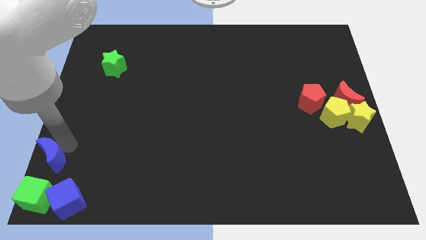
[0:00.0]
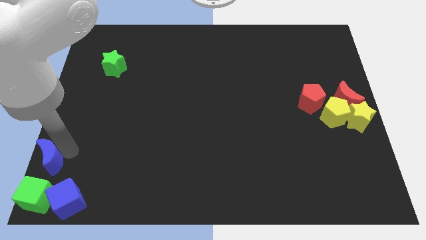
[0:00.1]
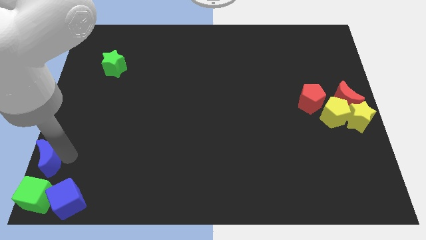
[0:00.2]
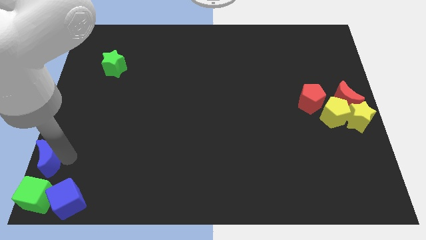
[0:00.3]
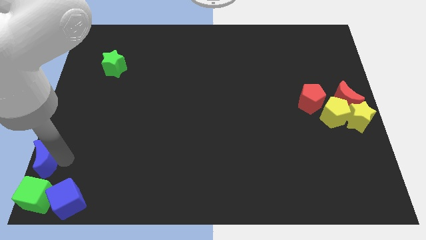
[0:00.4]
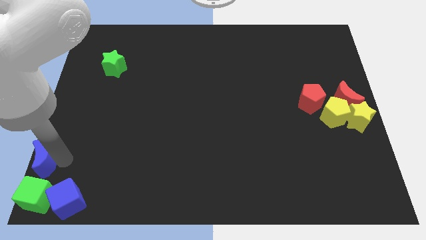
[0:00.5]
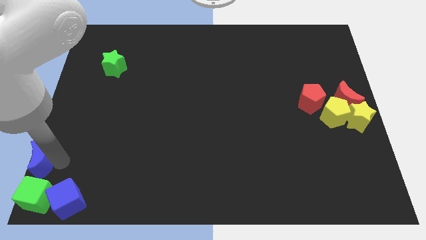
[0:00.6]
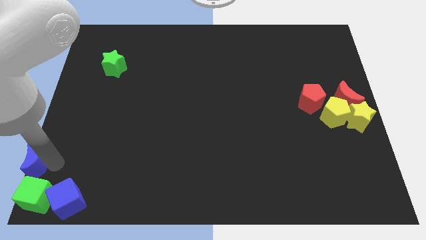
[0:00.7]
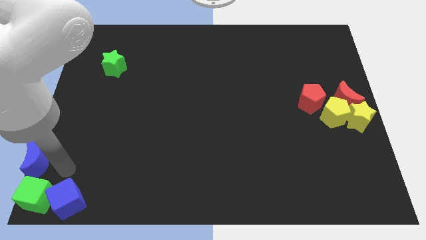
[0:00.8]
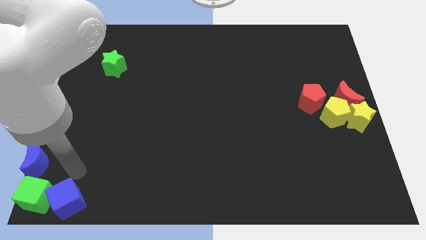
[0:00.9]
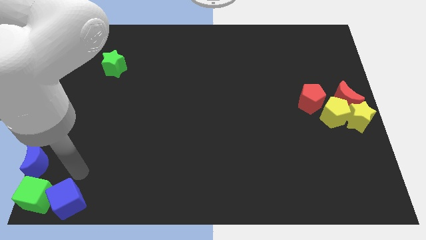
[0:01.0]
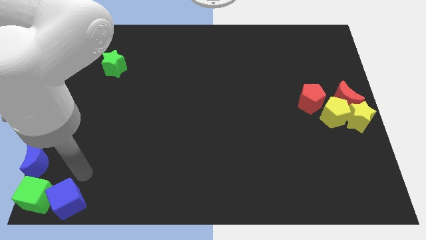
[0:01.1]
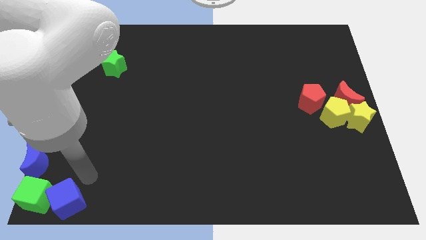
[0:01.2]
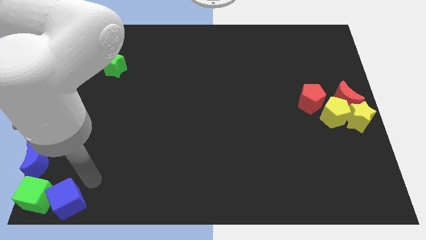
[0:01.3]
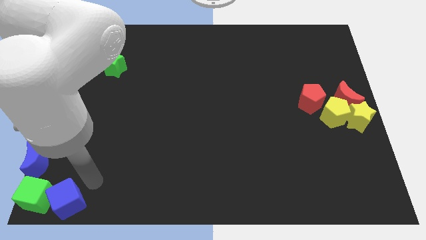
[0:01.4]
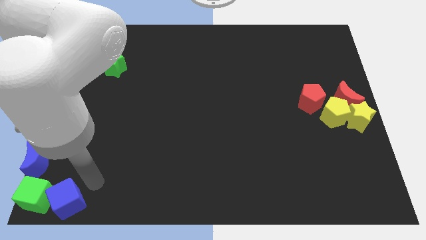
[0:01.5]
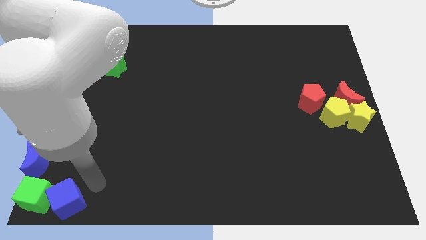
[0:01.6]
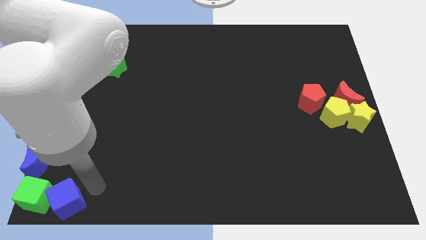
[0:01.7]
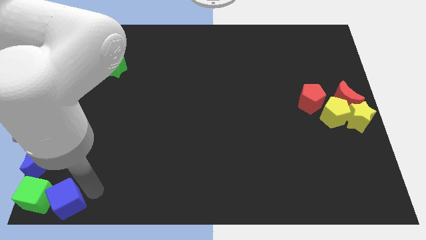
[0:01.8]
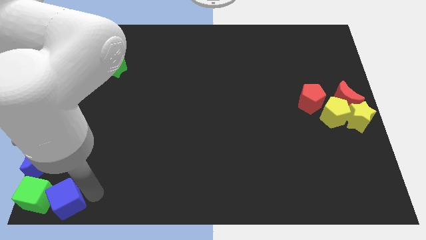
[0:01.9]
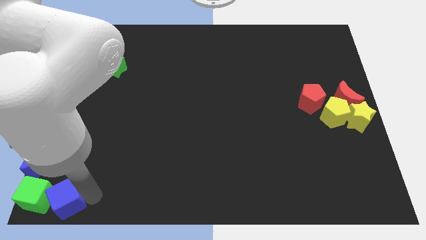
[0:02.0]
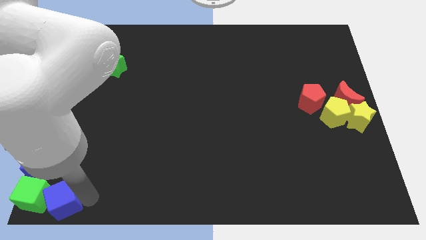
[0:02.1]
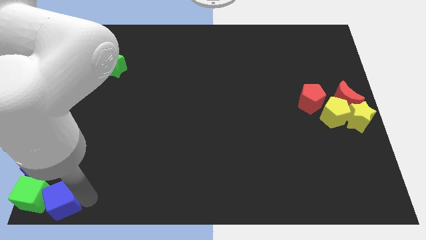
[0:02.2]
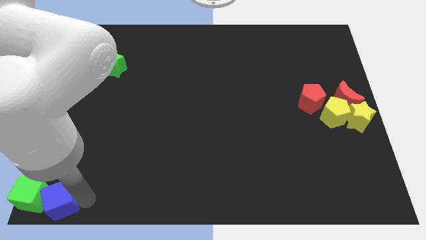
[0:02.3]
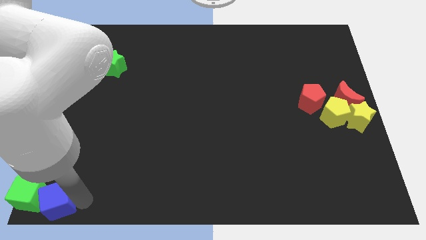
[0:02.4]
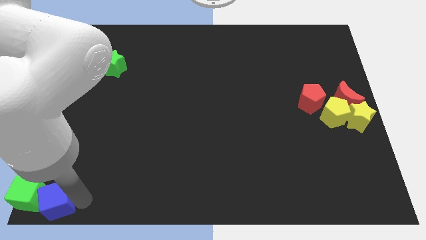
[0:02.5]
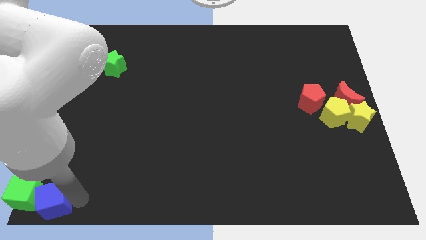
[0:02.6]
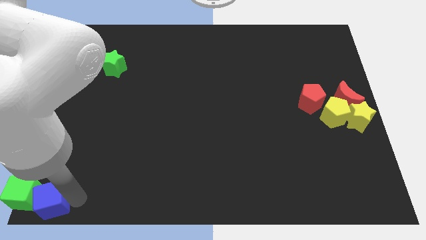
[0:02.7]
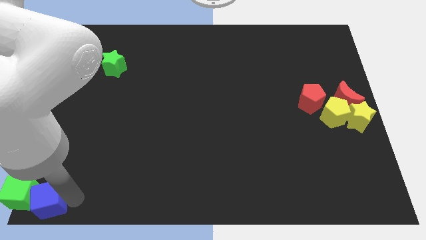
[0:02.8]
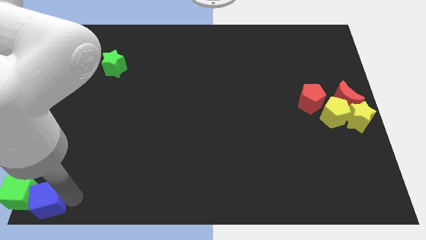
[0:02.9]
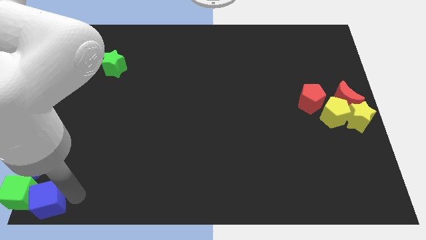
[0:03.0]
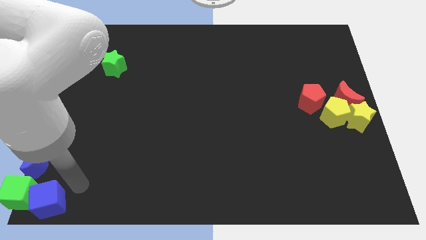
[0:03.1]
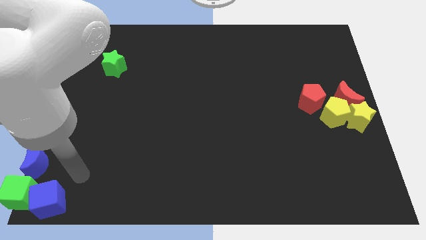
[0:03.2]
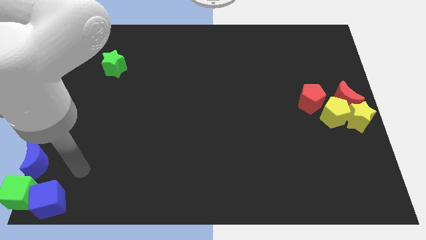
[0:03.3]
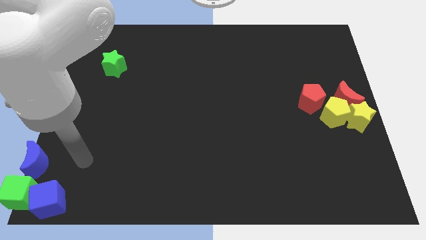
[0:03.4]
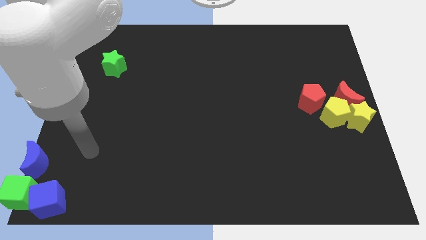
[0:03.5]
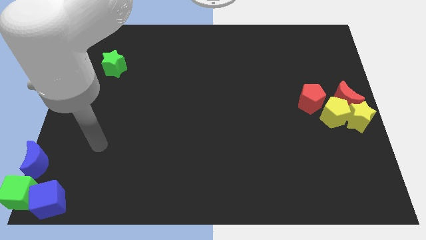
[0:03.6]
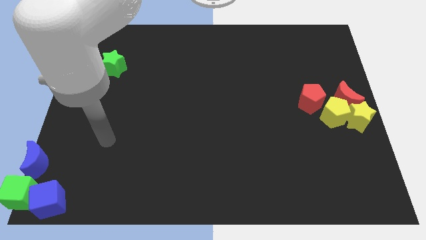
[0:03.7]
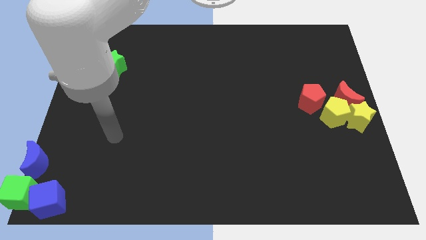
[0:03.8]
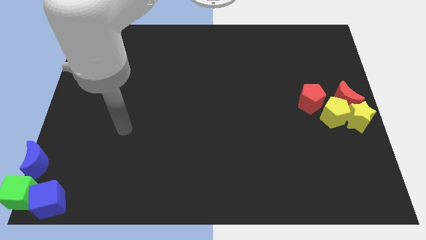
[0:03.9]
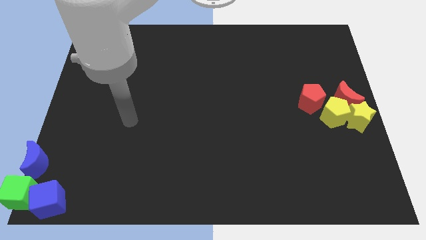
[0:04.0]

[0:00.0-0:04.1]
move the blue blocks and green cube to the bottom left corner

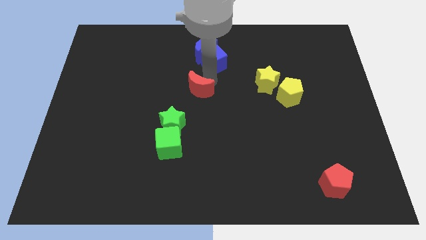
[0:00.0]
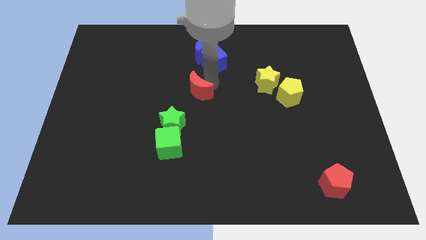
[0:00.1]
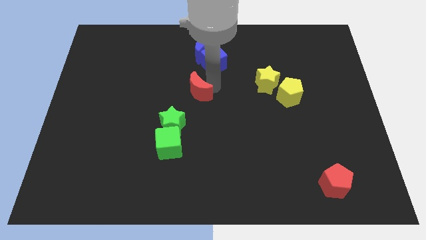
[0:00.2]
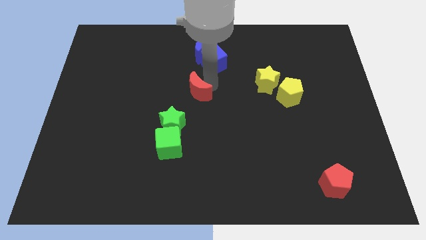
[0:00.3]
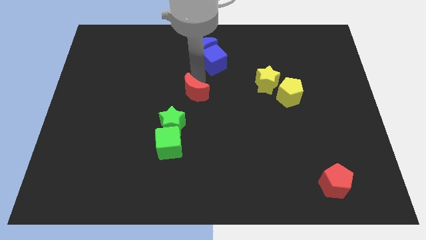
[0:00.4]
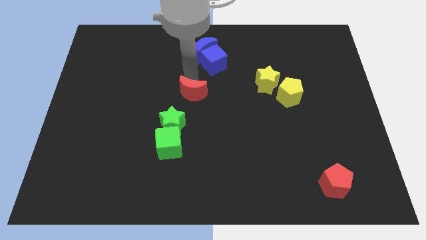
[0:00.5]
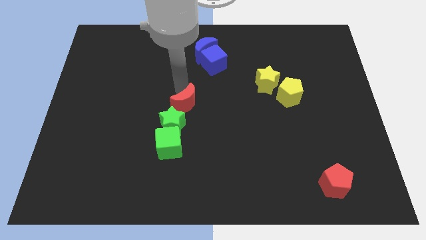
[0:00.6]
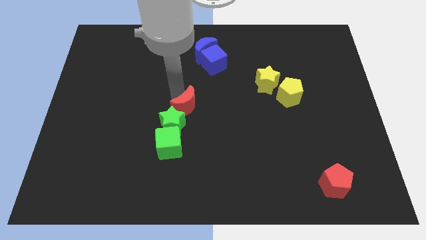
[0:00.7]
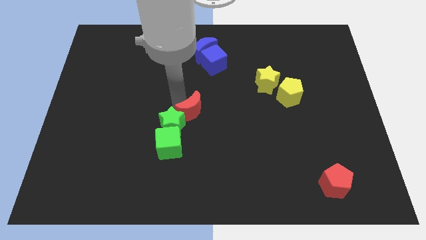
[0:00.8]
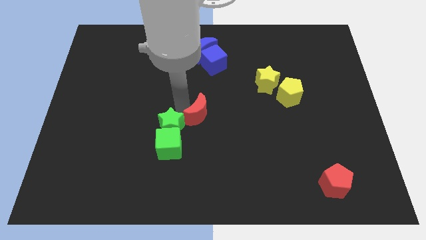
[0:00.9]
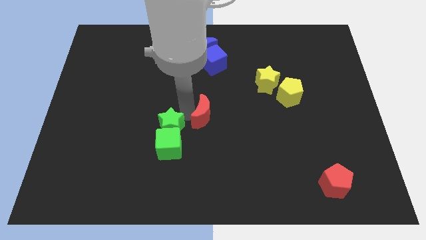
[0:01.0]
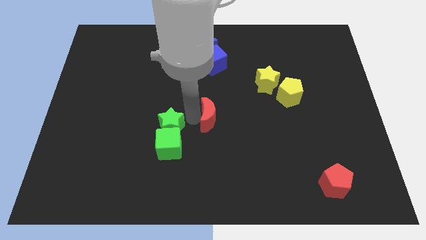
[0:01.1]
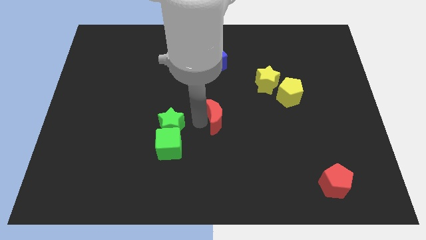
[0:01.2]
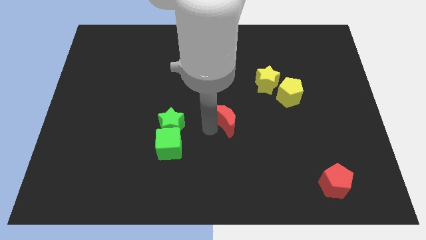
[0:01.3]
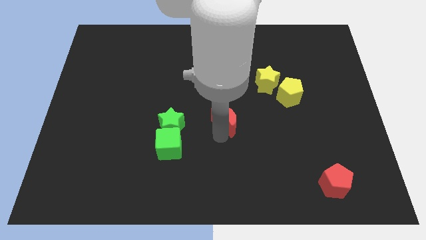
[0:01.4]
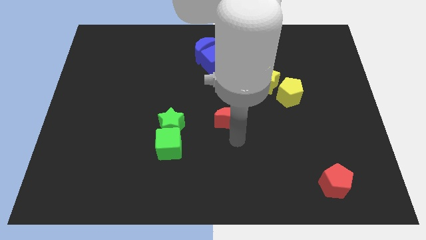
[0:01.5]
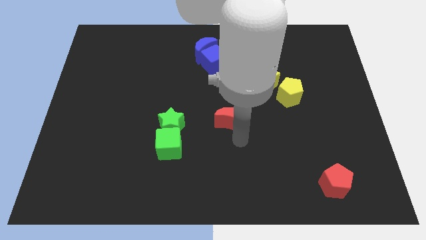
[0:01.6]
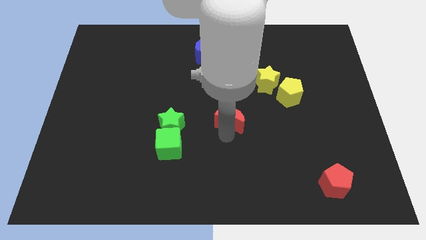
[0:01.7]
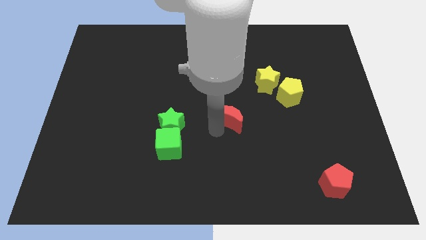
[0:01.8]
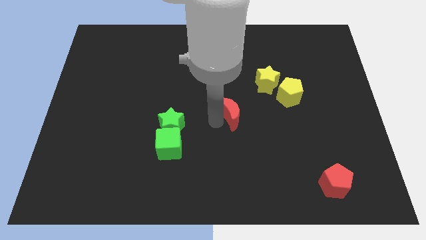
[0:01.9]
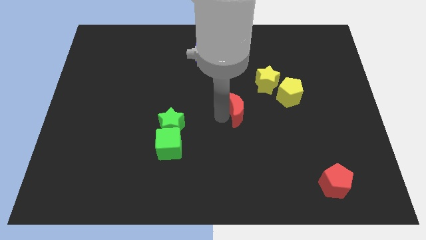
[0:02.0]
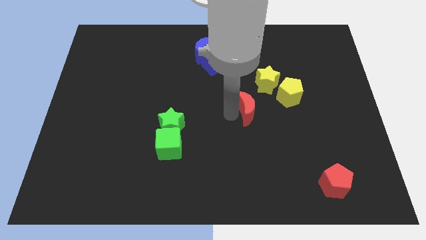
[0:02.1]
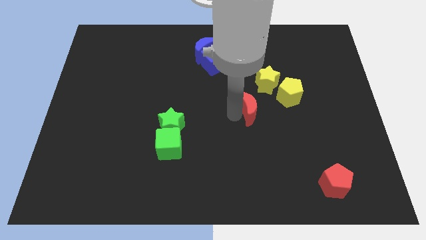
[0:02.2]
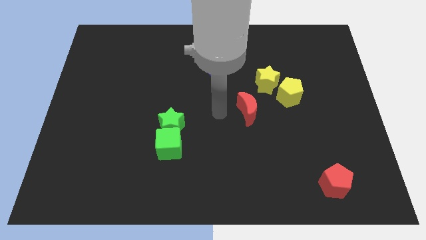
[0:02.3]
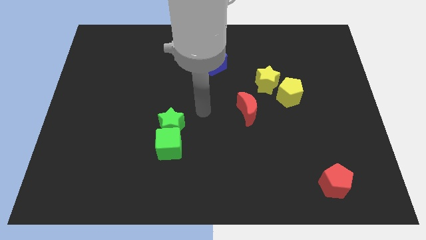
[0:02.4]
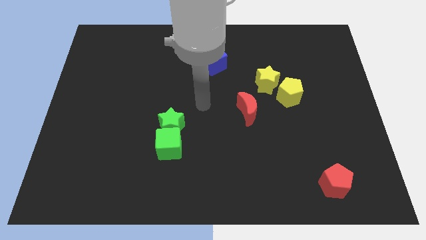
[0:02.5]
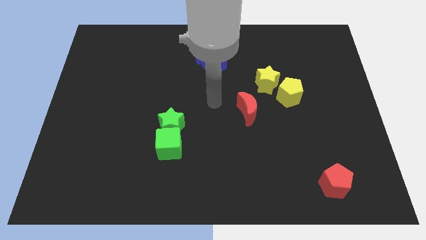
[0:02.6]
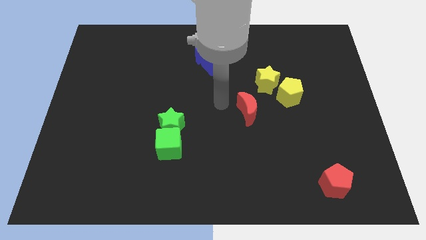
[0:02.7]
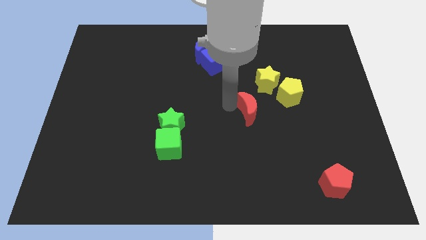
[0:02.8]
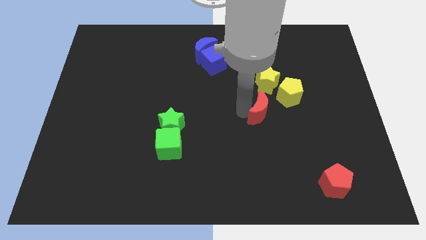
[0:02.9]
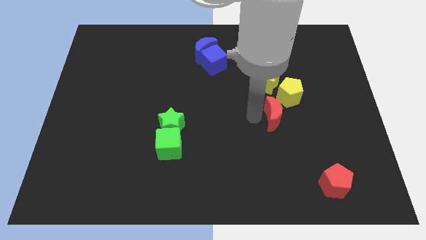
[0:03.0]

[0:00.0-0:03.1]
move the red moon below yellow pentagon

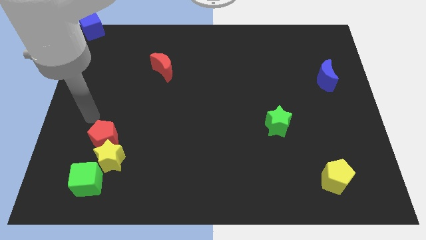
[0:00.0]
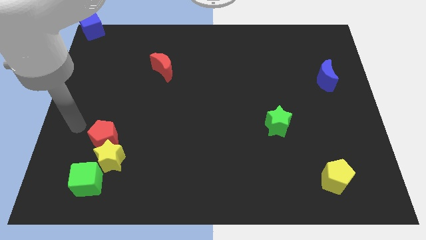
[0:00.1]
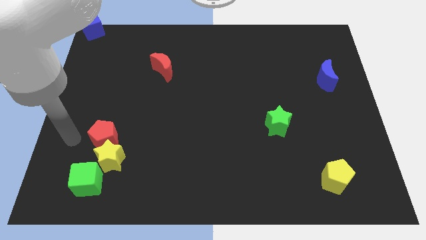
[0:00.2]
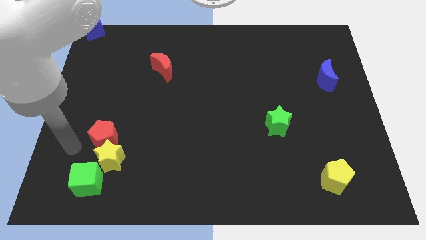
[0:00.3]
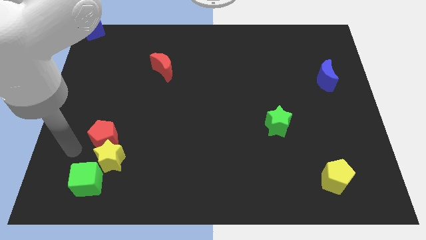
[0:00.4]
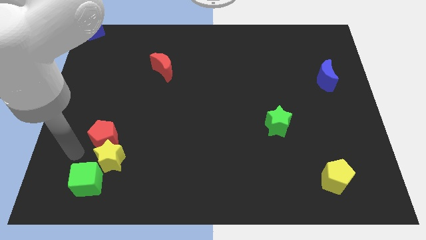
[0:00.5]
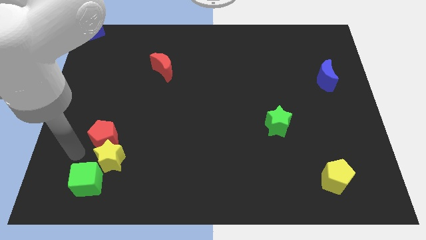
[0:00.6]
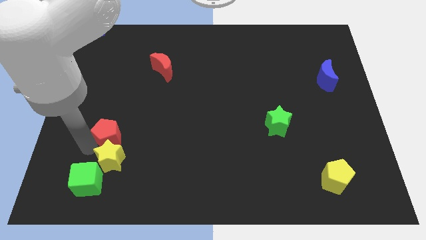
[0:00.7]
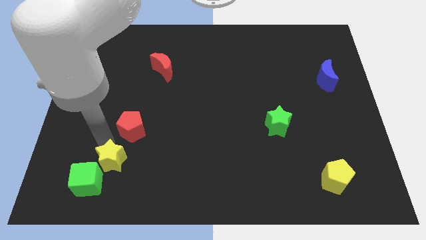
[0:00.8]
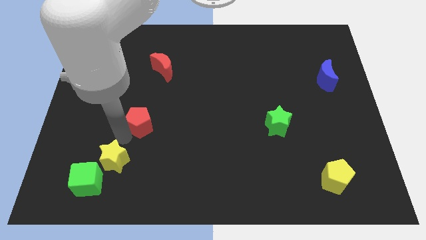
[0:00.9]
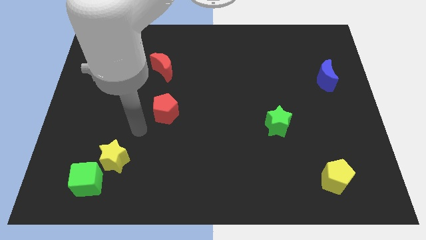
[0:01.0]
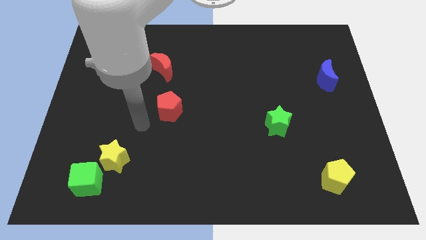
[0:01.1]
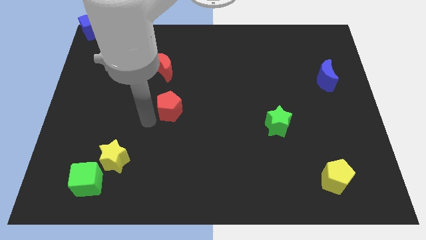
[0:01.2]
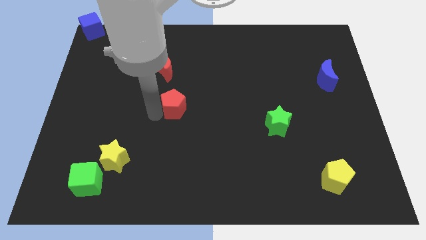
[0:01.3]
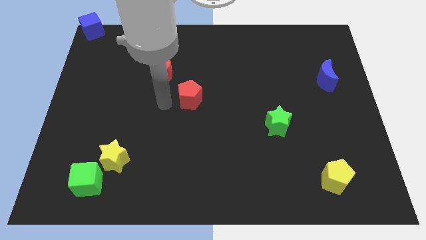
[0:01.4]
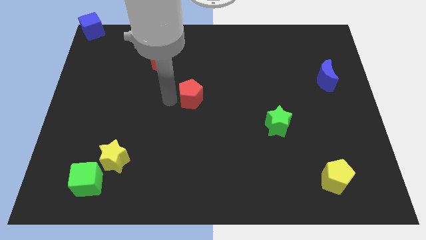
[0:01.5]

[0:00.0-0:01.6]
separate the red pentagon and the yellow star

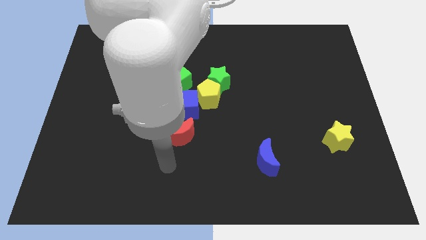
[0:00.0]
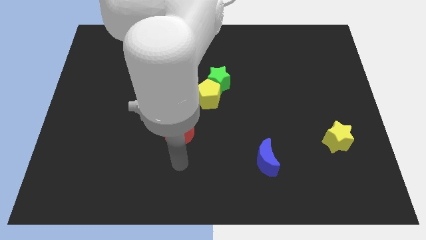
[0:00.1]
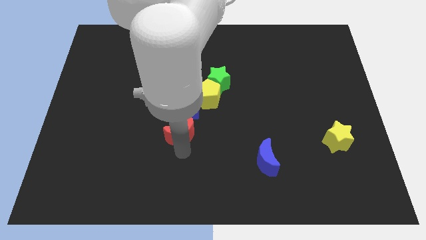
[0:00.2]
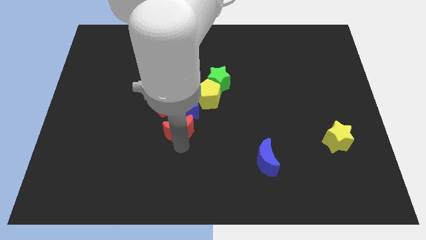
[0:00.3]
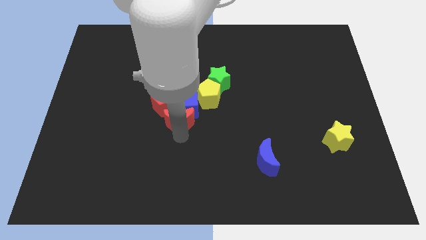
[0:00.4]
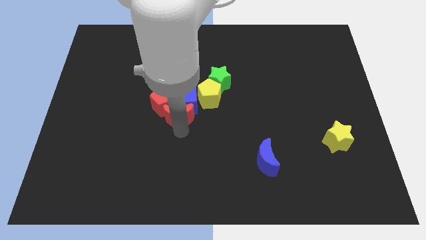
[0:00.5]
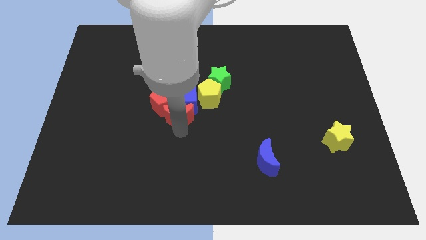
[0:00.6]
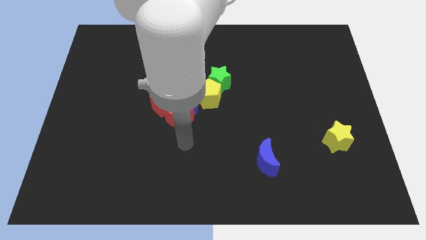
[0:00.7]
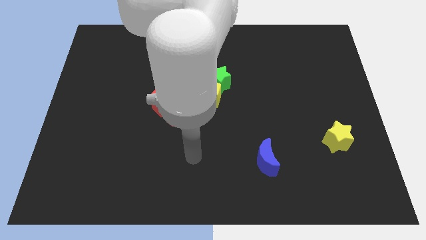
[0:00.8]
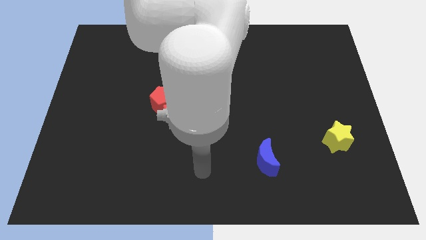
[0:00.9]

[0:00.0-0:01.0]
push red moon into blue cube
